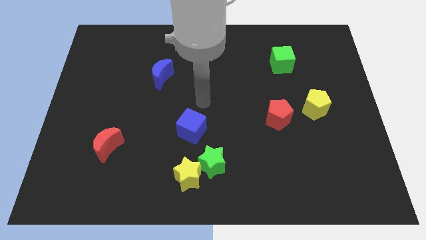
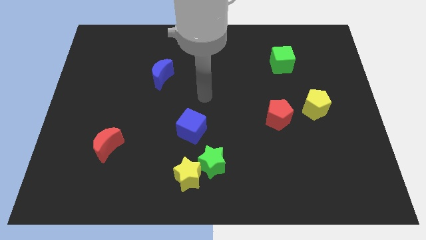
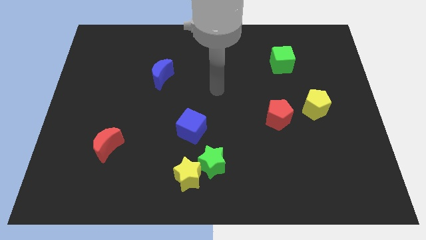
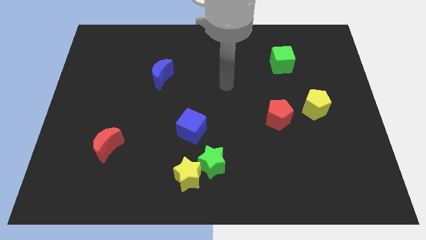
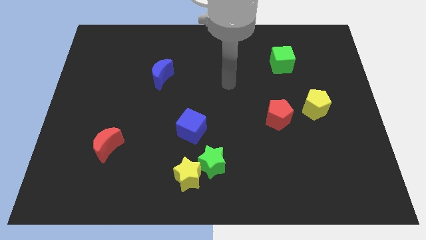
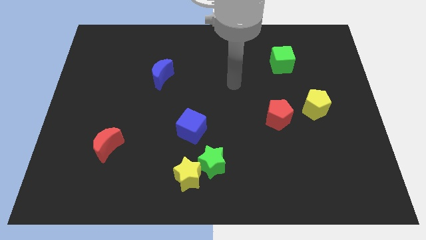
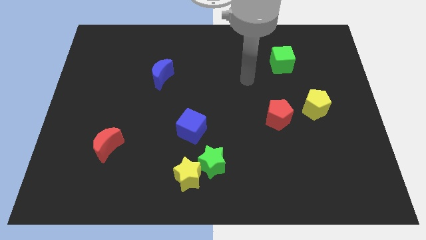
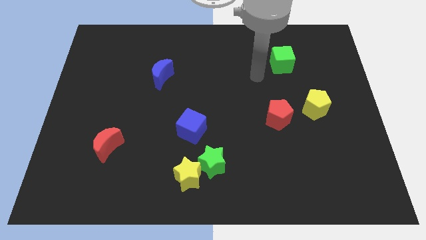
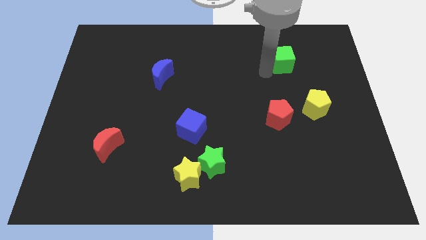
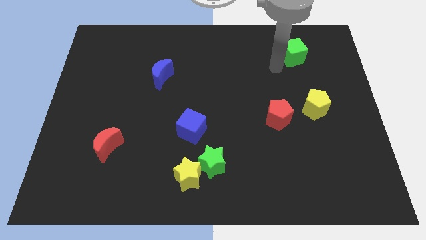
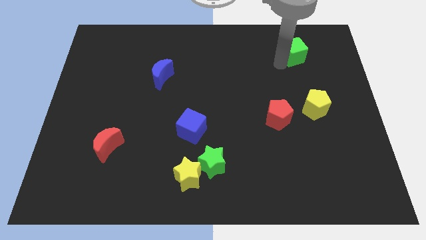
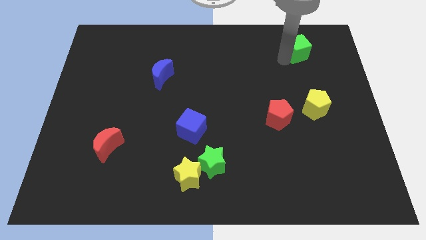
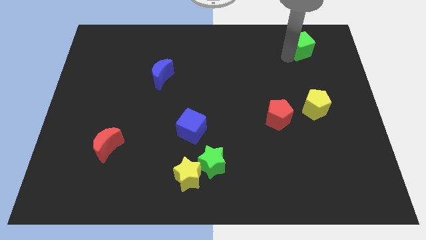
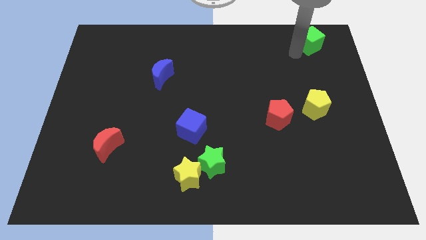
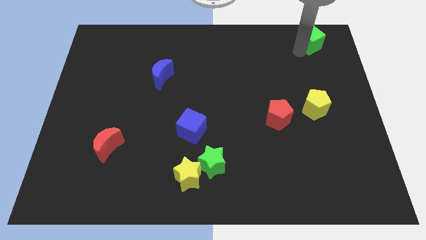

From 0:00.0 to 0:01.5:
push the green cube towards the right of the board

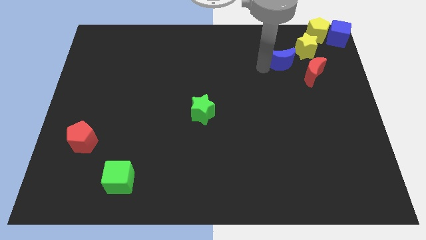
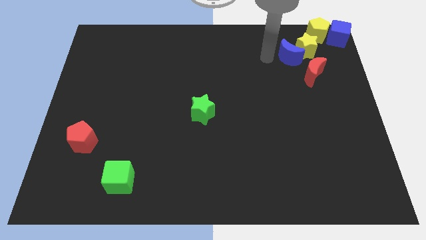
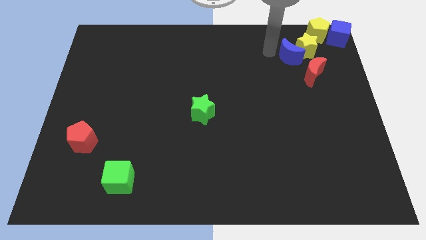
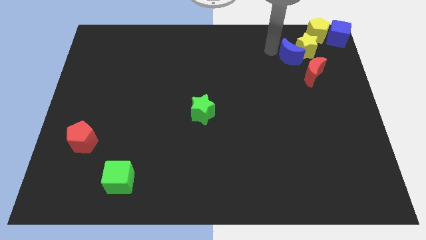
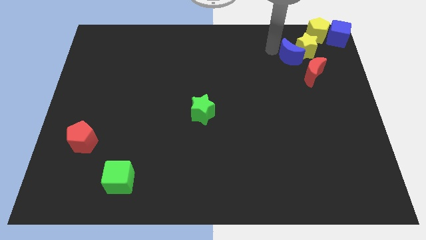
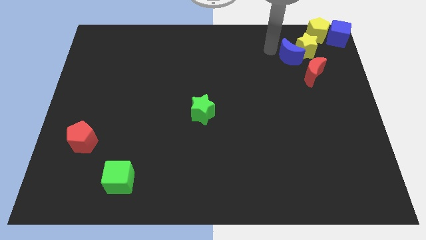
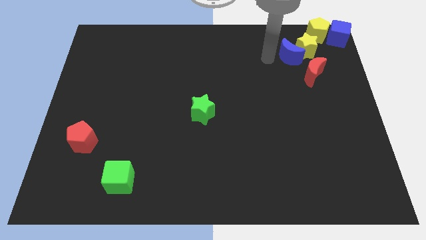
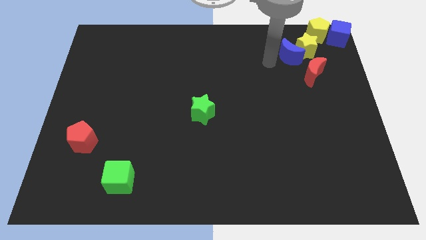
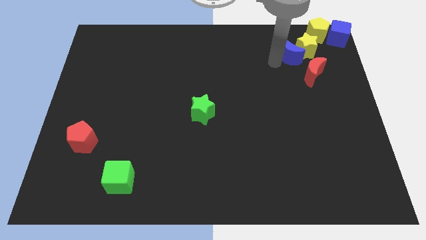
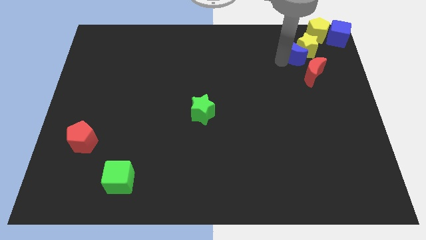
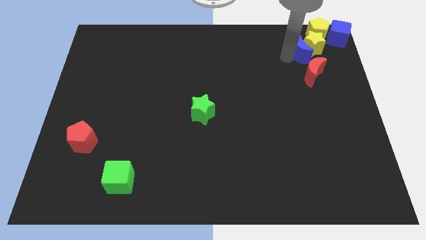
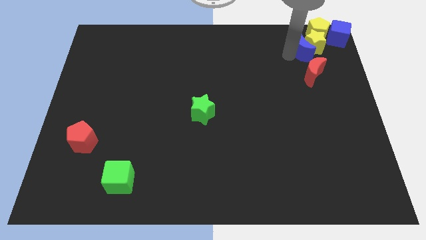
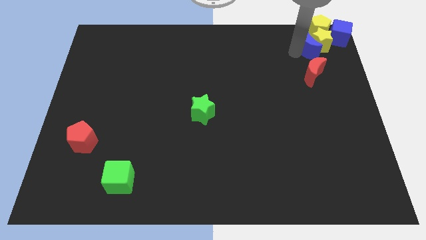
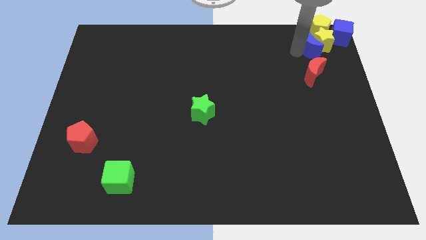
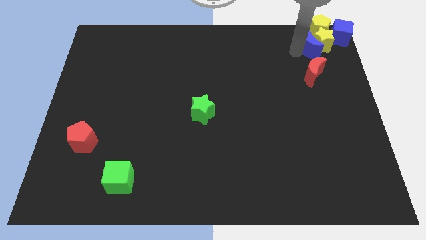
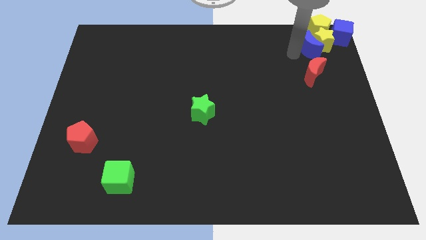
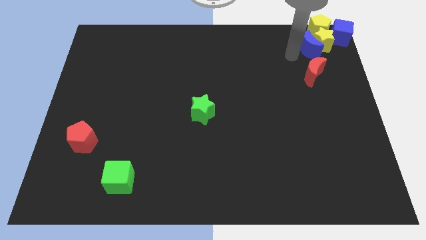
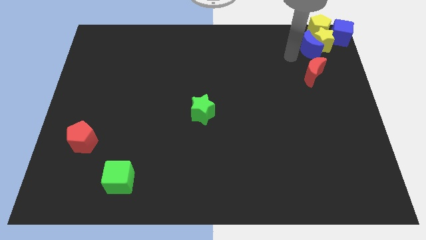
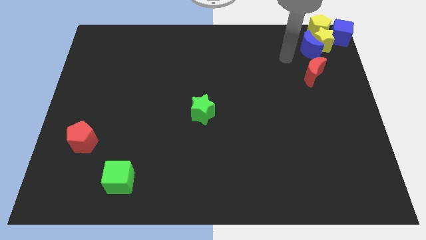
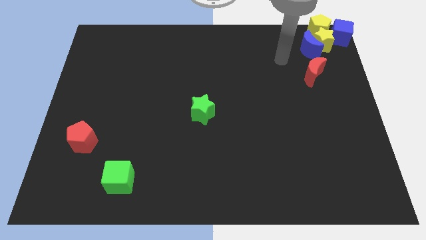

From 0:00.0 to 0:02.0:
push blue moon in to yellow star

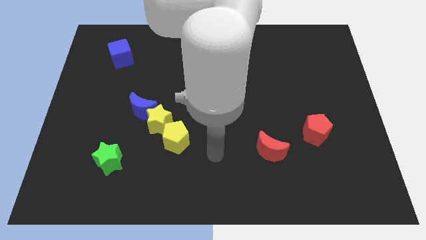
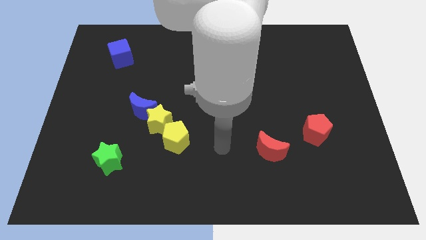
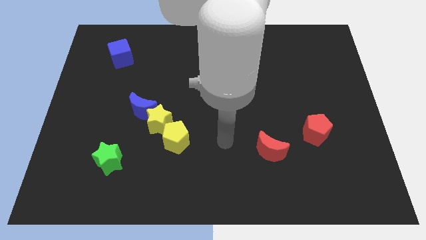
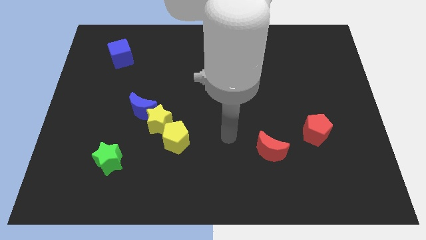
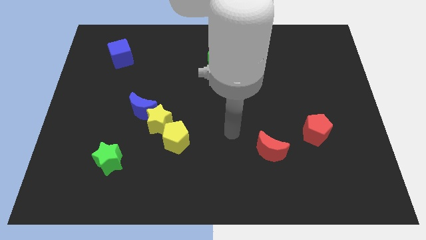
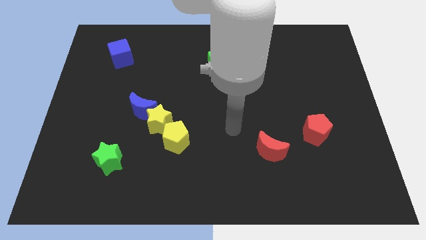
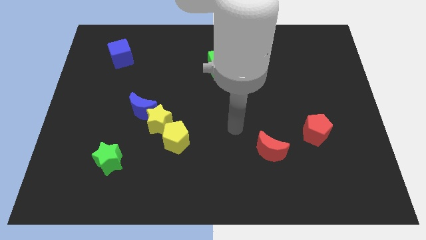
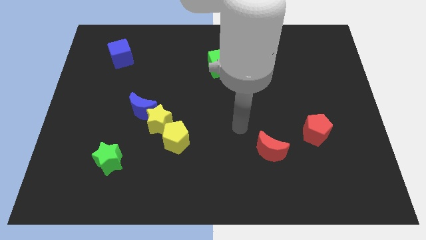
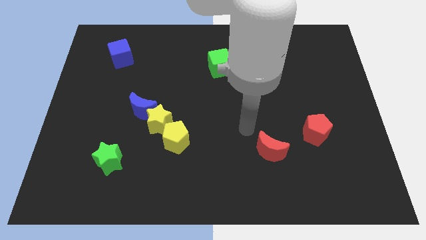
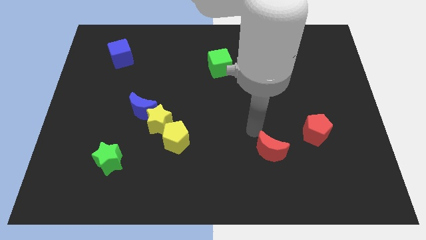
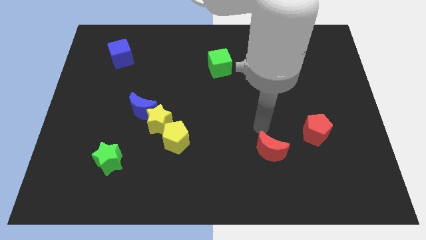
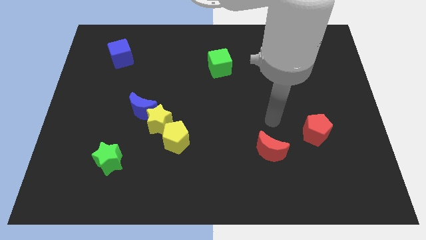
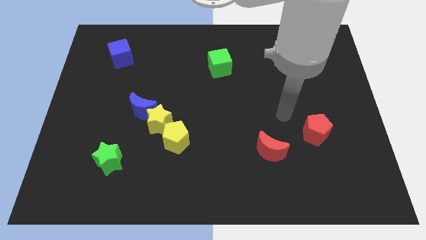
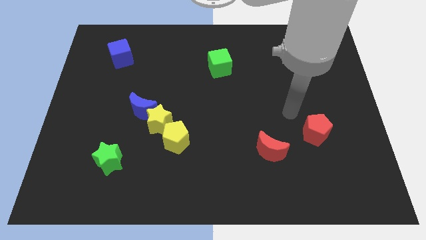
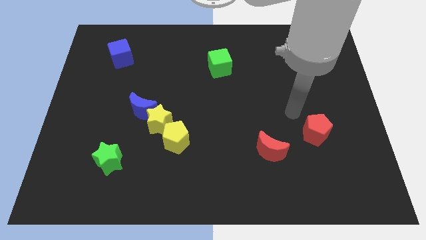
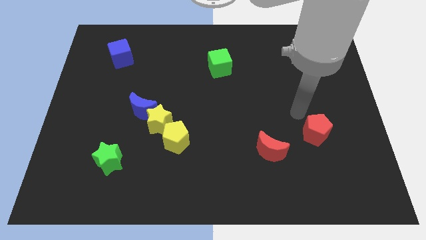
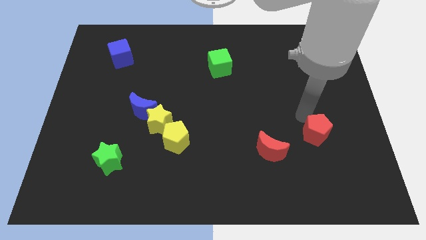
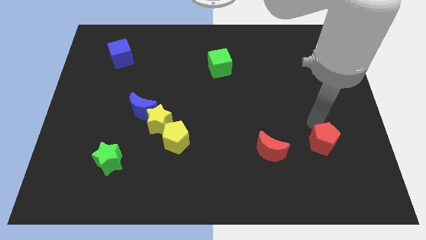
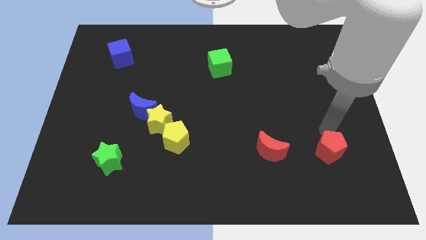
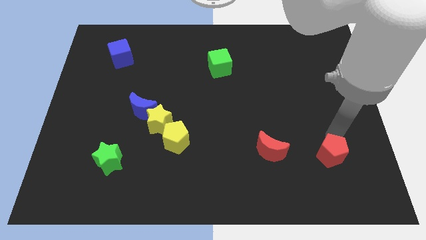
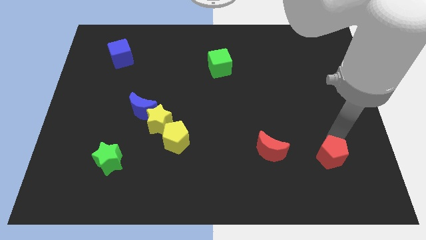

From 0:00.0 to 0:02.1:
move arm towards the red pentagon on the bottom right of the board

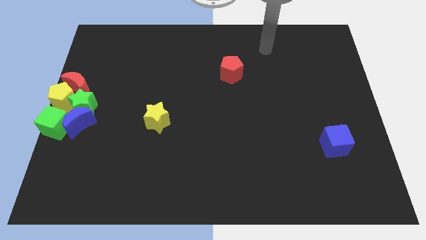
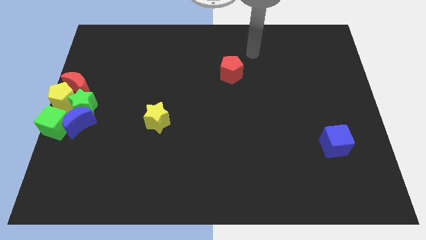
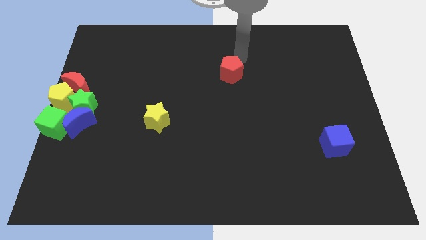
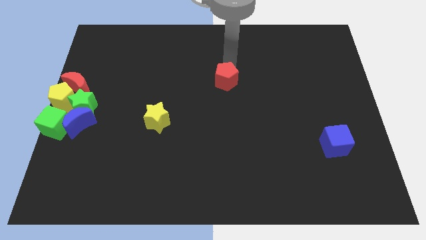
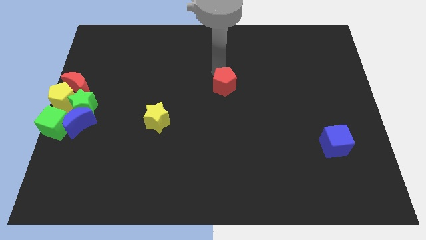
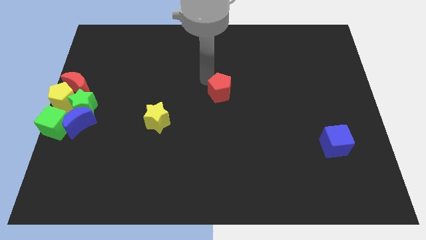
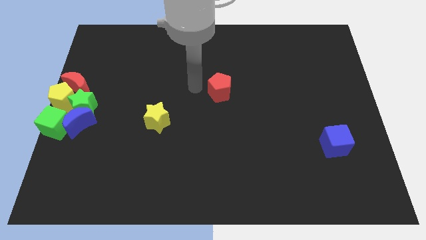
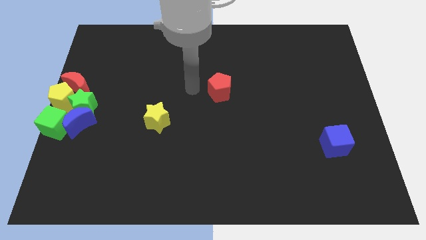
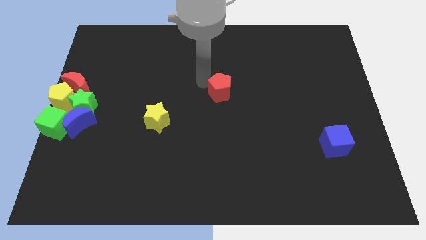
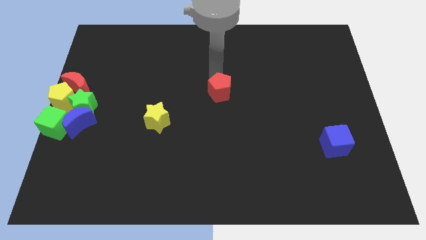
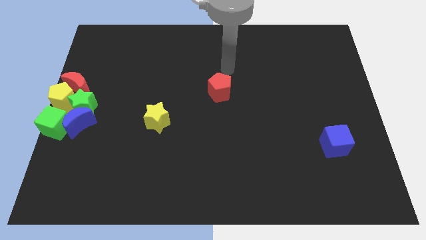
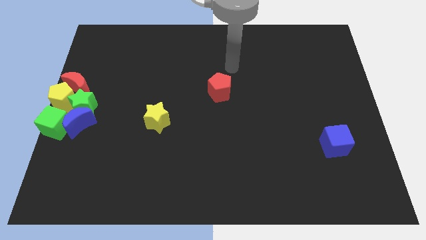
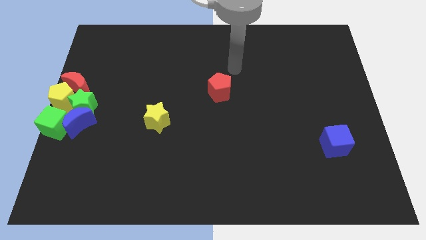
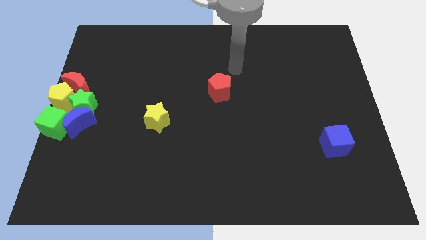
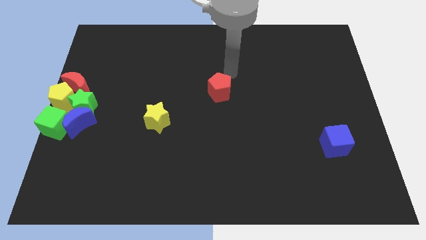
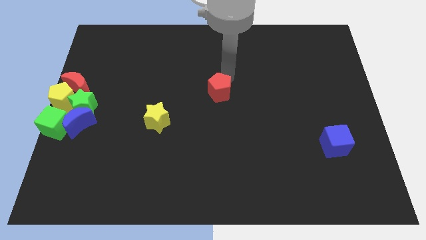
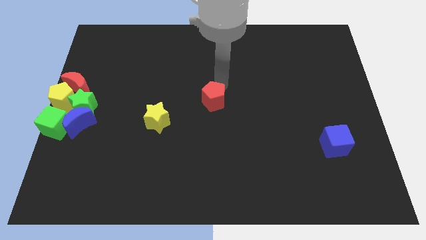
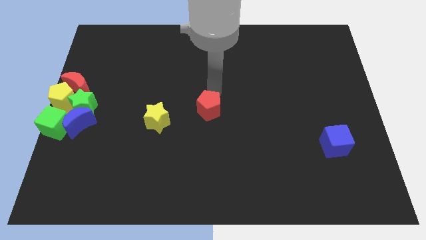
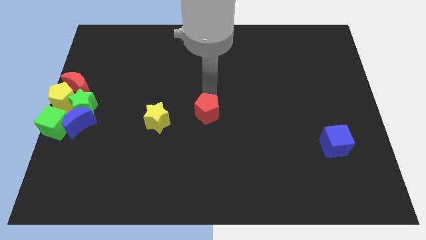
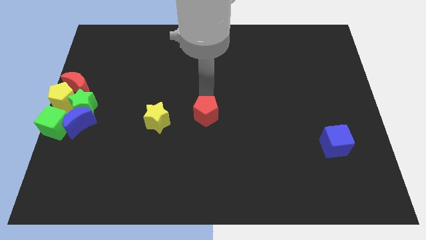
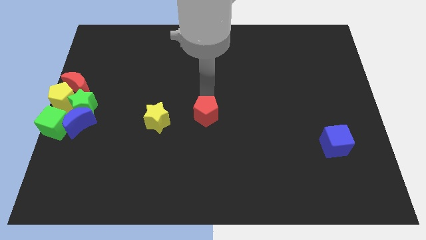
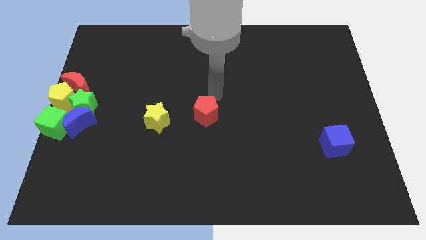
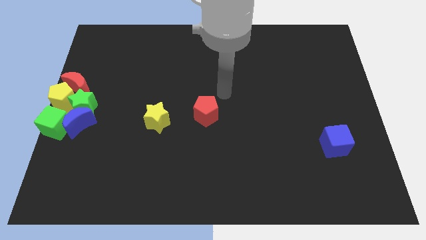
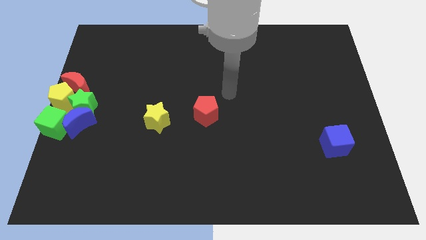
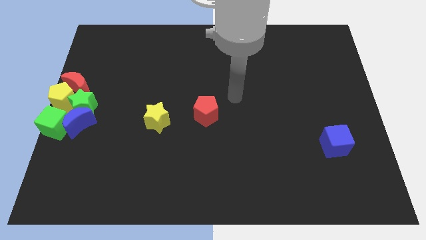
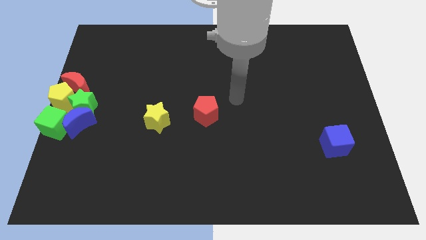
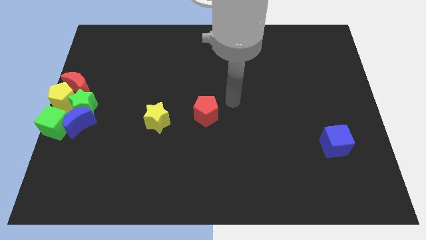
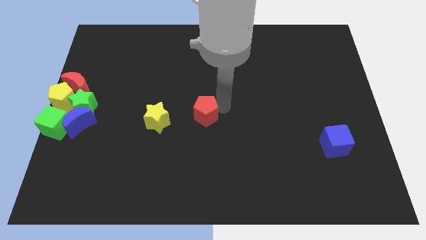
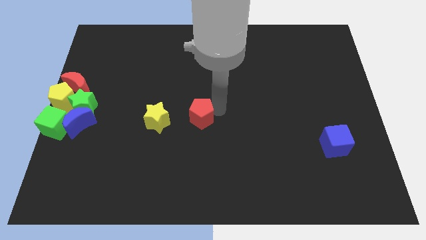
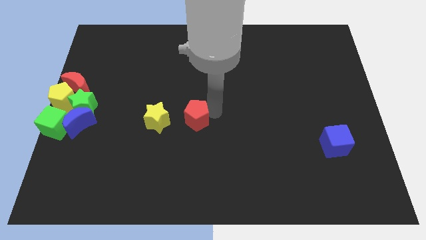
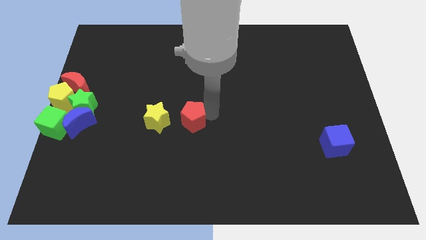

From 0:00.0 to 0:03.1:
put the red pentagon parallel right to the yellow star

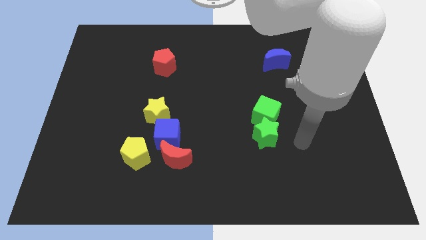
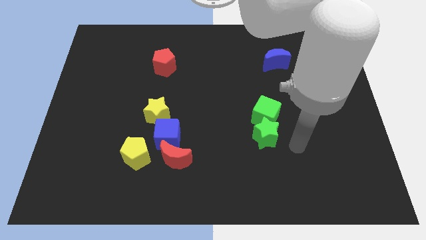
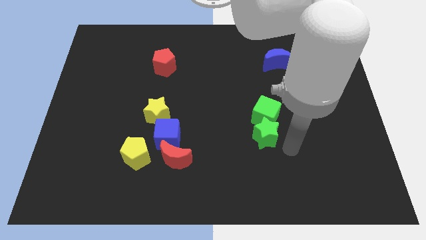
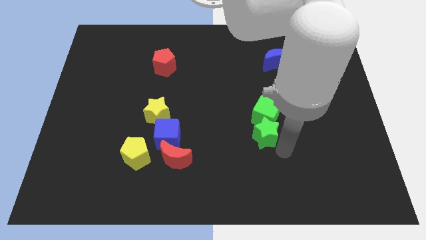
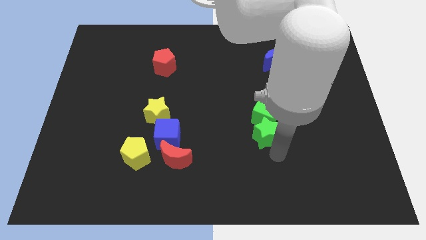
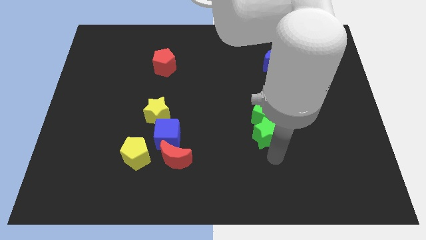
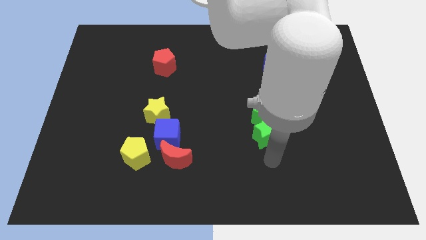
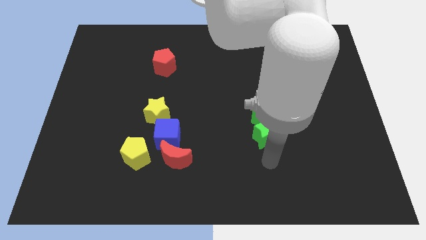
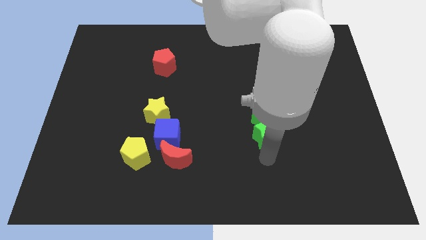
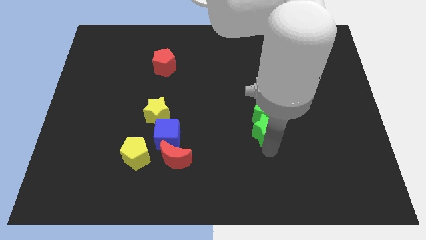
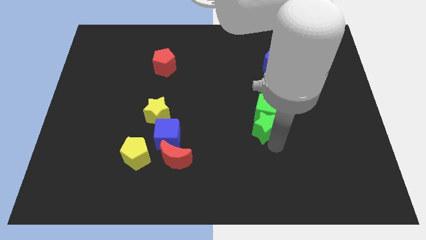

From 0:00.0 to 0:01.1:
touch the bottom of green star
